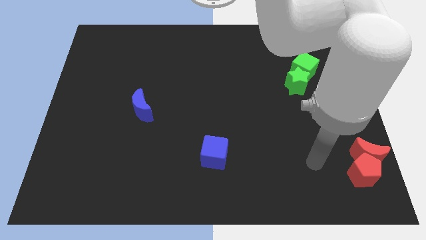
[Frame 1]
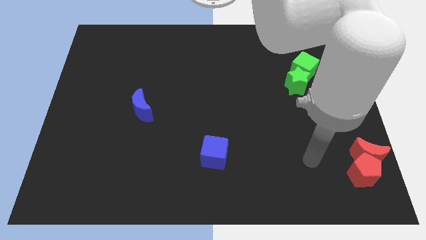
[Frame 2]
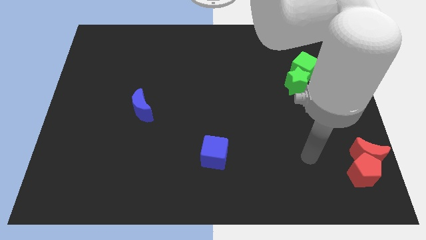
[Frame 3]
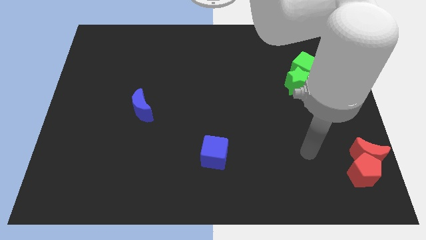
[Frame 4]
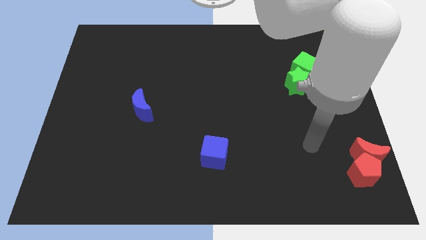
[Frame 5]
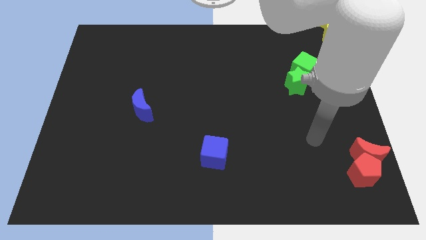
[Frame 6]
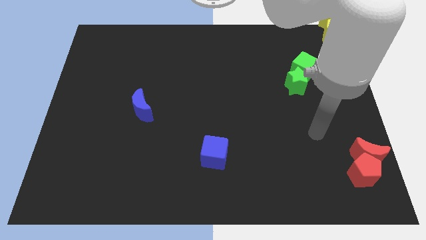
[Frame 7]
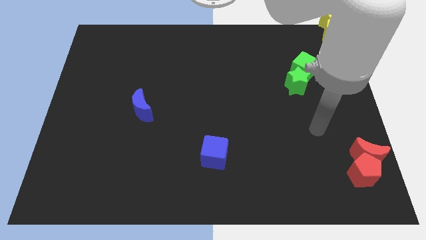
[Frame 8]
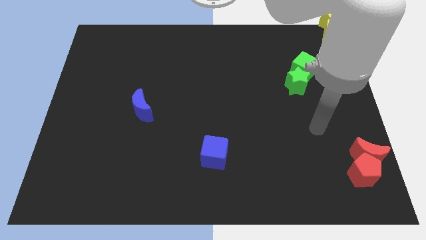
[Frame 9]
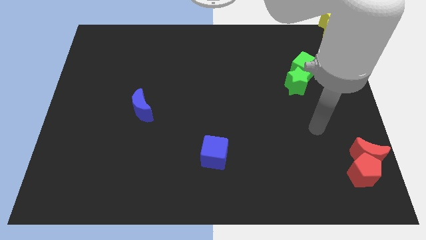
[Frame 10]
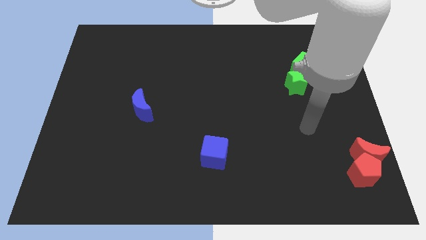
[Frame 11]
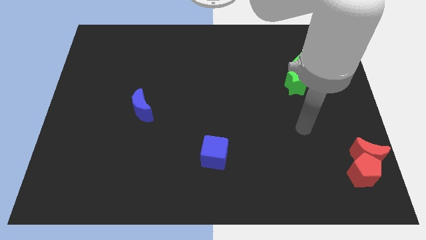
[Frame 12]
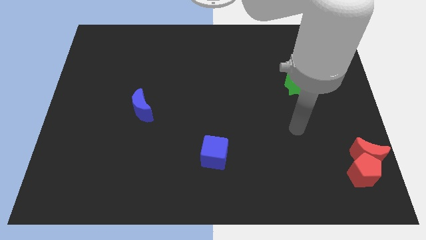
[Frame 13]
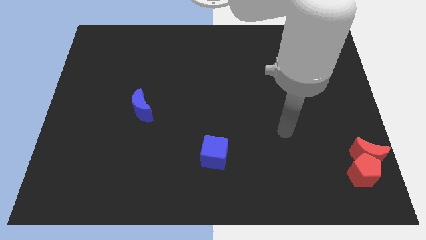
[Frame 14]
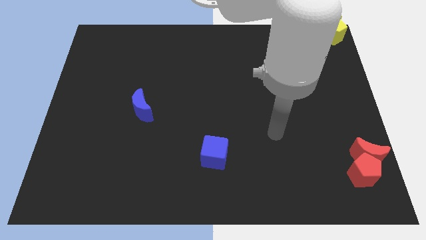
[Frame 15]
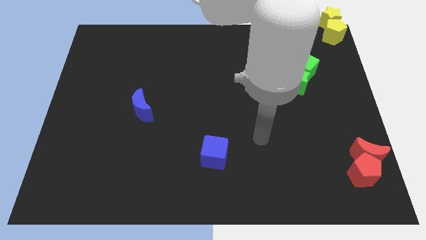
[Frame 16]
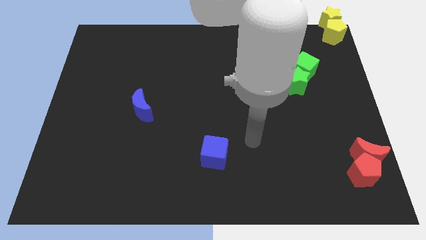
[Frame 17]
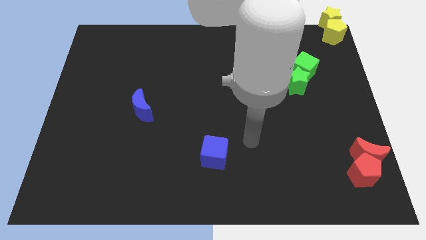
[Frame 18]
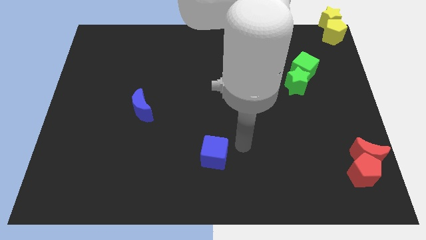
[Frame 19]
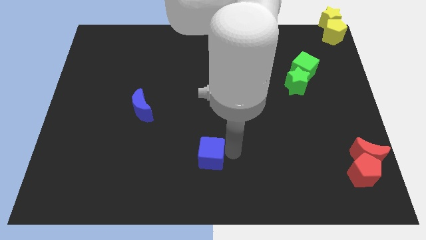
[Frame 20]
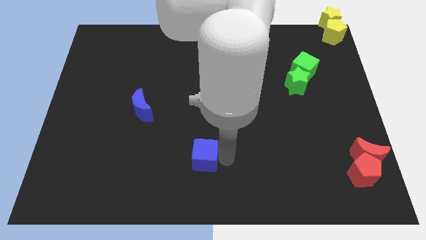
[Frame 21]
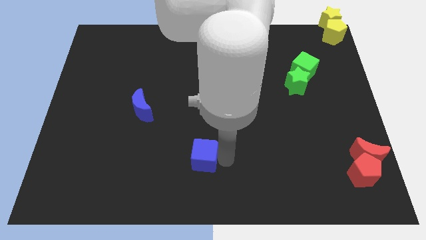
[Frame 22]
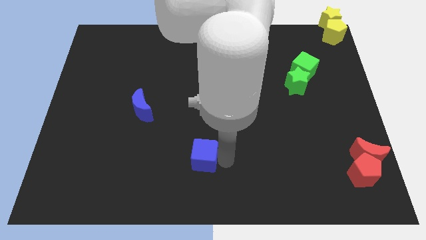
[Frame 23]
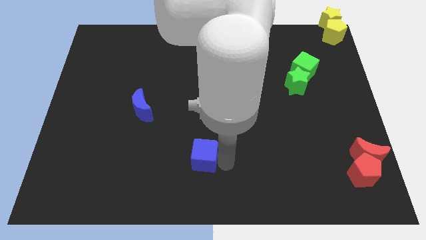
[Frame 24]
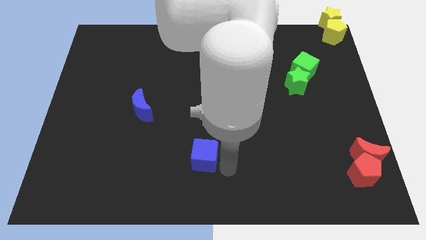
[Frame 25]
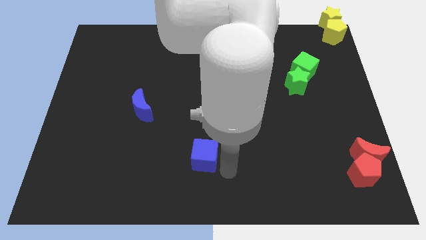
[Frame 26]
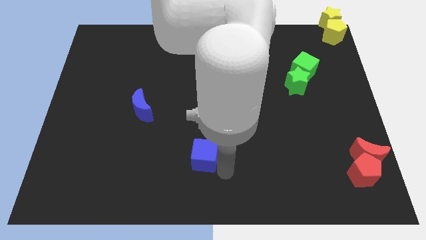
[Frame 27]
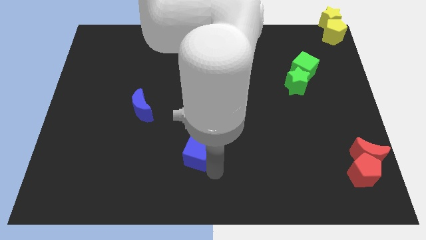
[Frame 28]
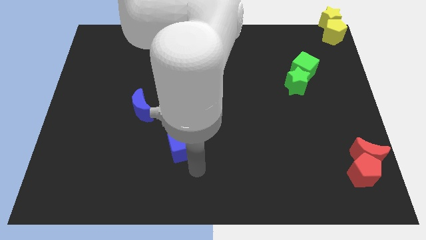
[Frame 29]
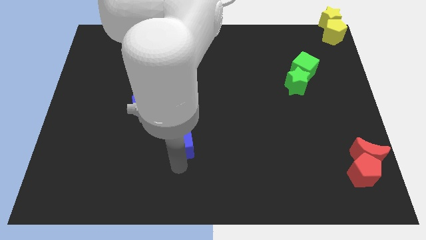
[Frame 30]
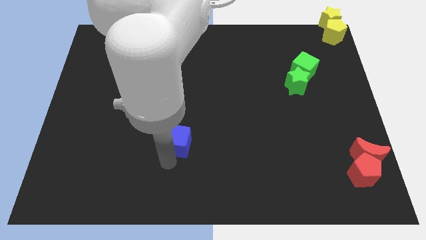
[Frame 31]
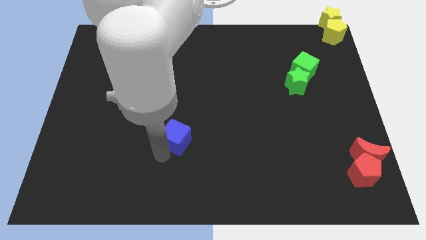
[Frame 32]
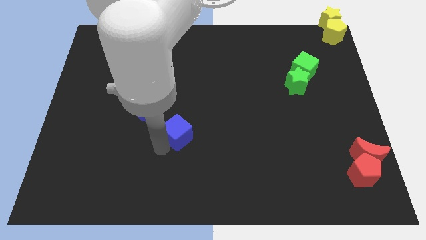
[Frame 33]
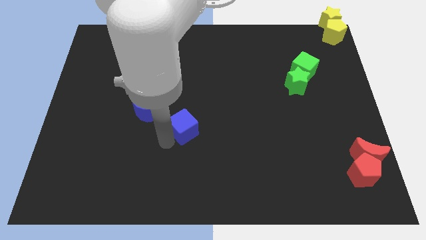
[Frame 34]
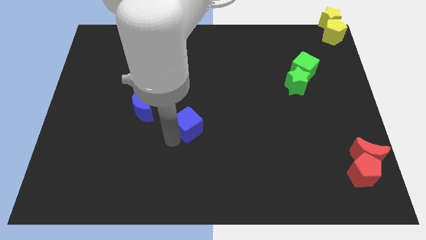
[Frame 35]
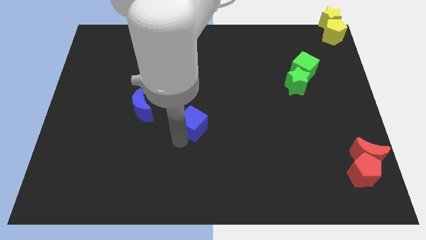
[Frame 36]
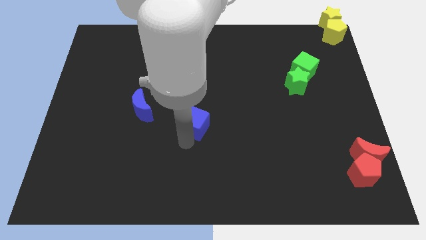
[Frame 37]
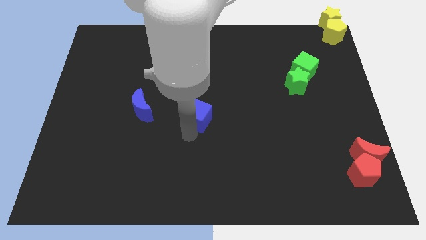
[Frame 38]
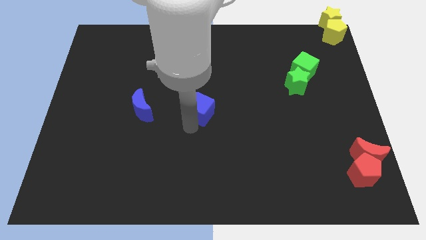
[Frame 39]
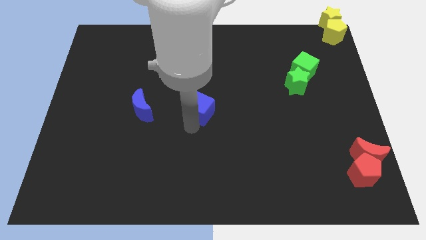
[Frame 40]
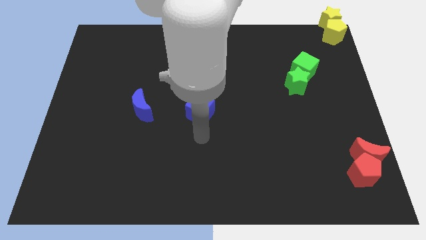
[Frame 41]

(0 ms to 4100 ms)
push the blue cube horizontally at the right side of the blue crescent

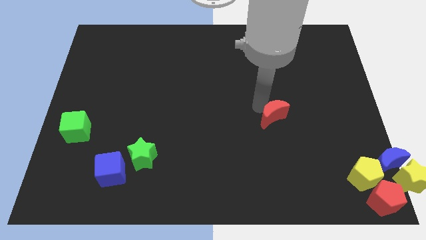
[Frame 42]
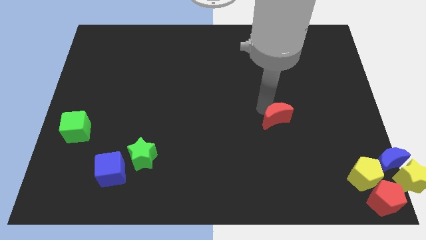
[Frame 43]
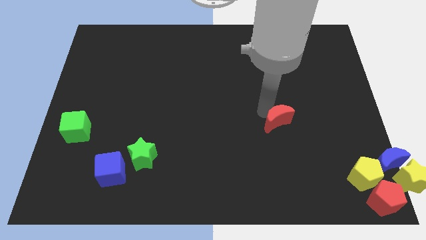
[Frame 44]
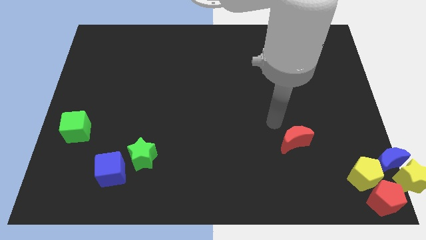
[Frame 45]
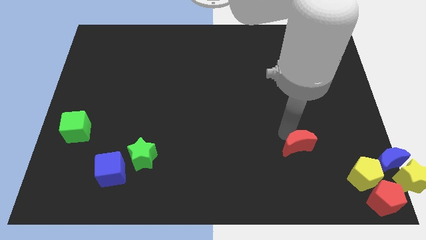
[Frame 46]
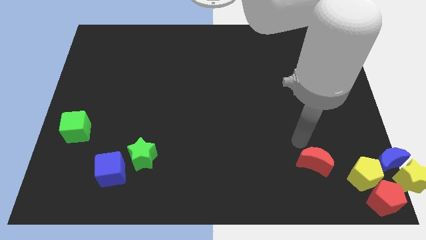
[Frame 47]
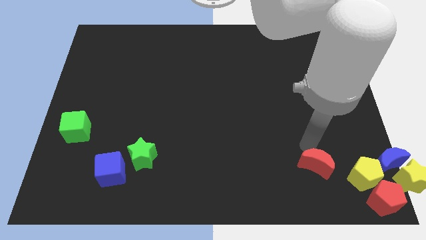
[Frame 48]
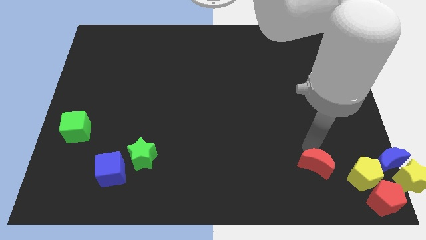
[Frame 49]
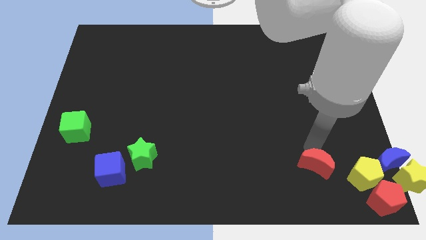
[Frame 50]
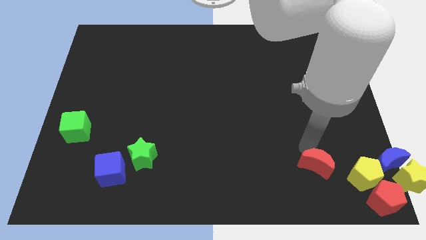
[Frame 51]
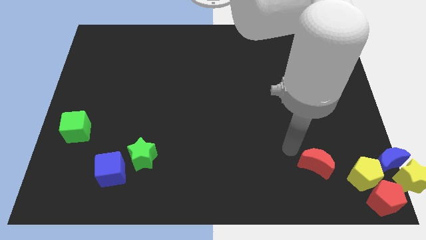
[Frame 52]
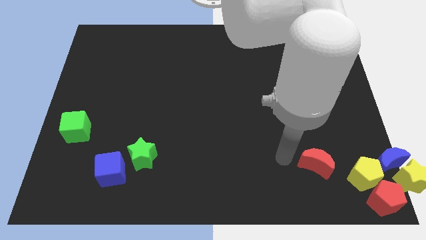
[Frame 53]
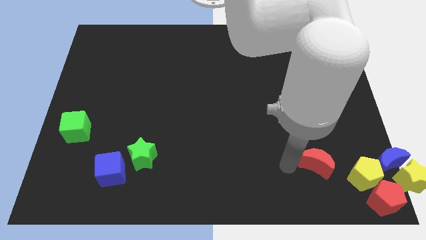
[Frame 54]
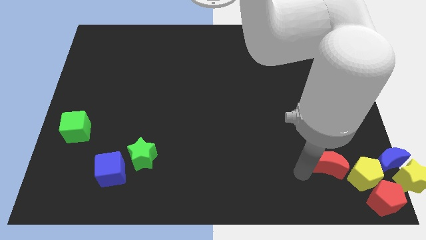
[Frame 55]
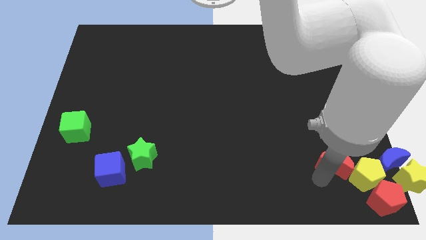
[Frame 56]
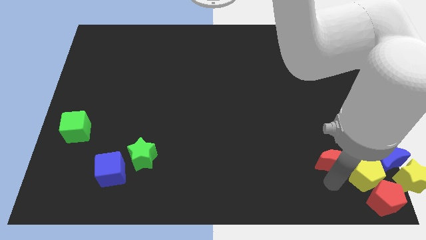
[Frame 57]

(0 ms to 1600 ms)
push the red crescent into the yellow pentagon

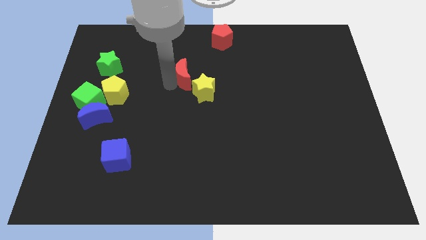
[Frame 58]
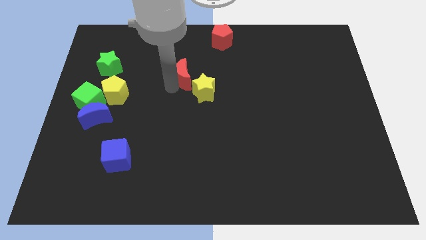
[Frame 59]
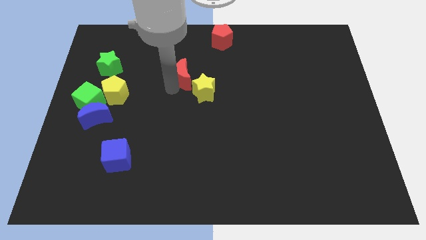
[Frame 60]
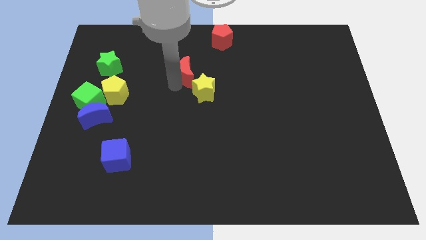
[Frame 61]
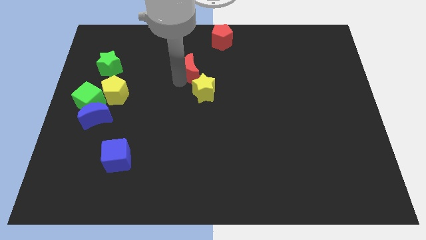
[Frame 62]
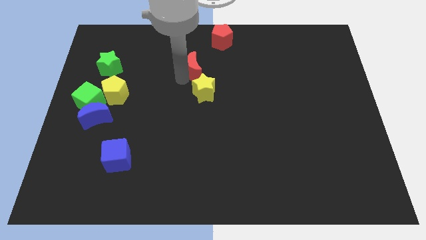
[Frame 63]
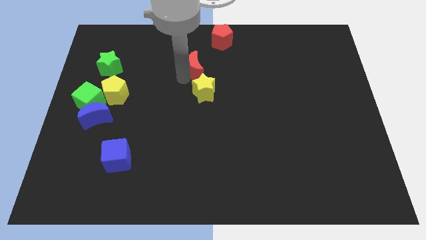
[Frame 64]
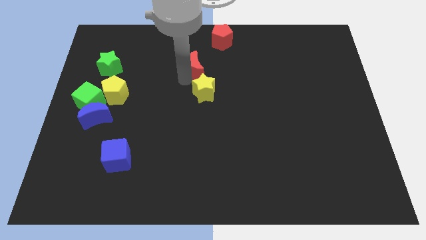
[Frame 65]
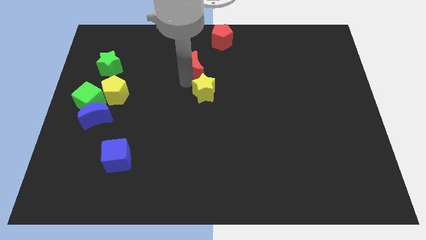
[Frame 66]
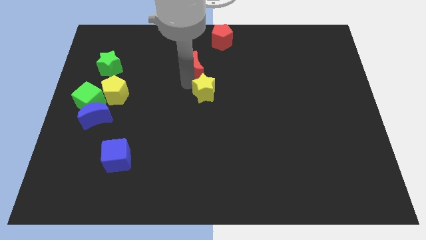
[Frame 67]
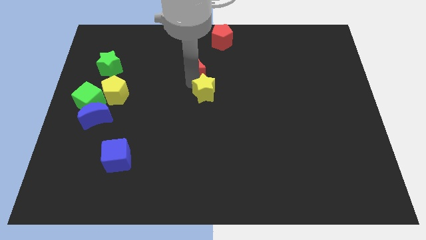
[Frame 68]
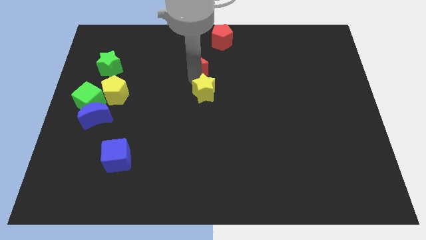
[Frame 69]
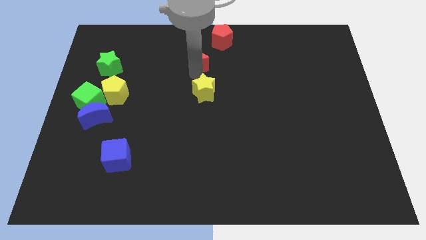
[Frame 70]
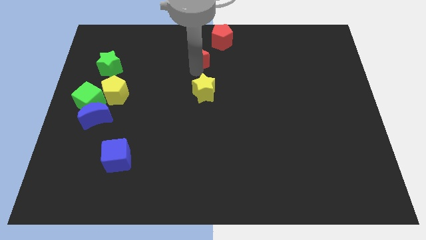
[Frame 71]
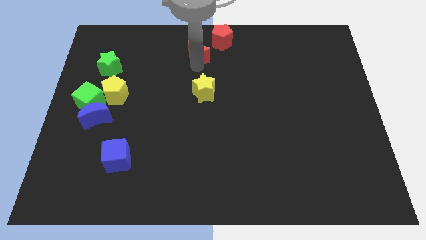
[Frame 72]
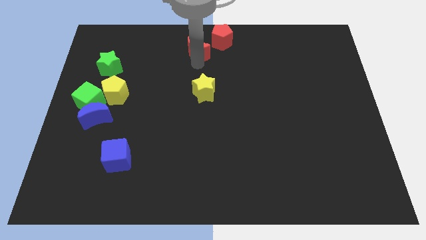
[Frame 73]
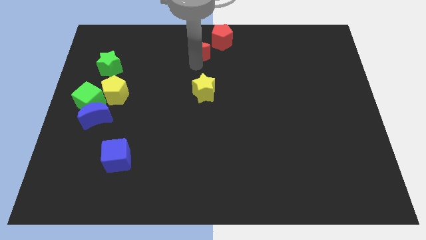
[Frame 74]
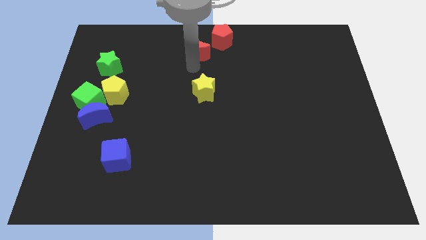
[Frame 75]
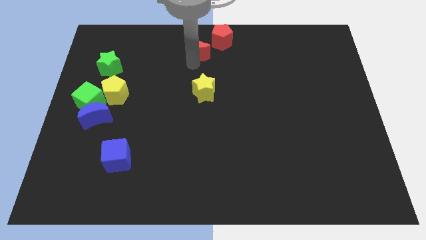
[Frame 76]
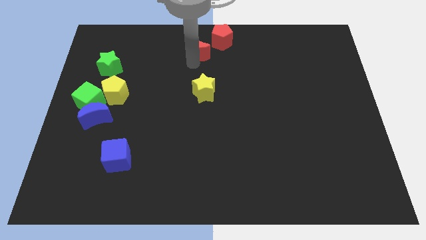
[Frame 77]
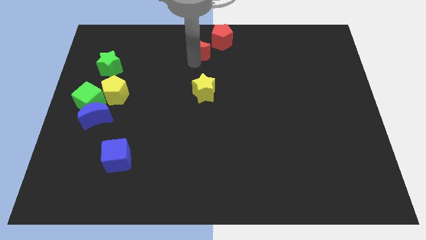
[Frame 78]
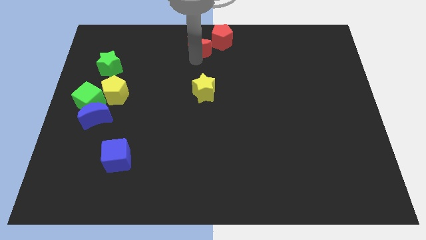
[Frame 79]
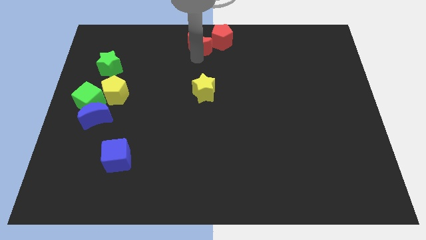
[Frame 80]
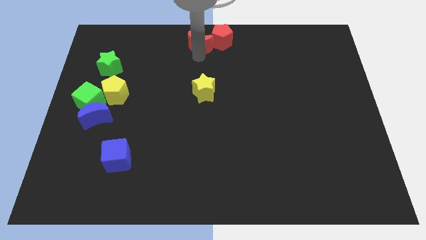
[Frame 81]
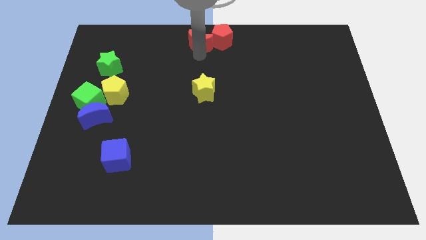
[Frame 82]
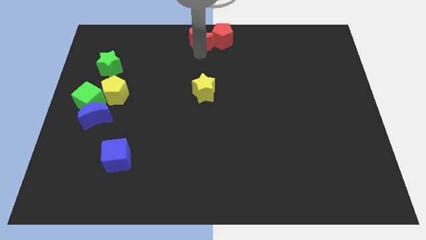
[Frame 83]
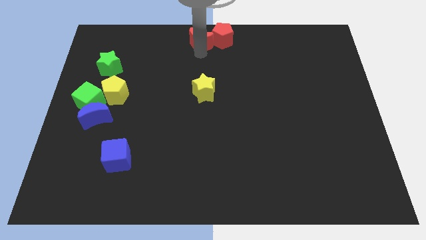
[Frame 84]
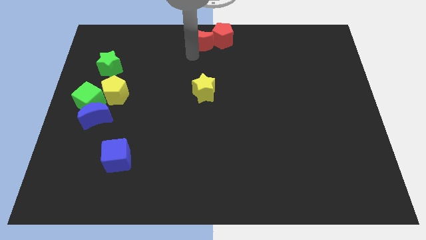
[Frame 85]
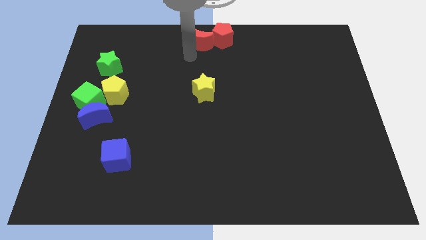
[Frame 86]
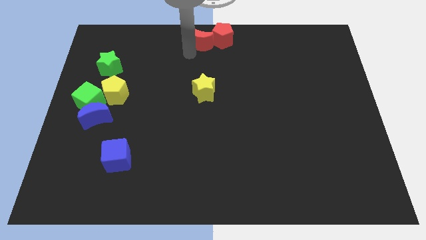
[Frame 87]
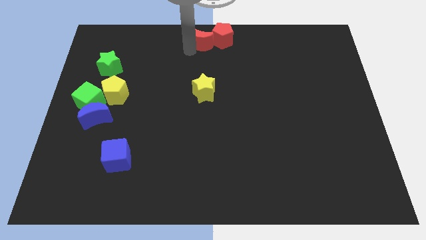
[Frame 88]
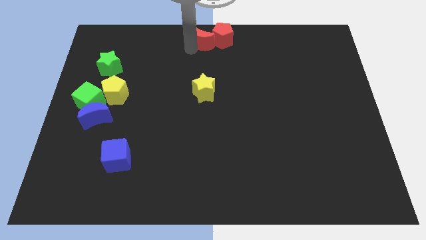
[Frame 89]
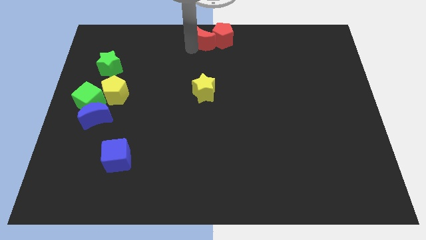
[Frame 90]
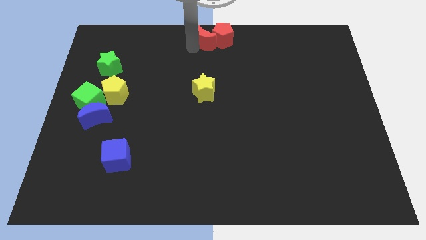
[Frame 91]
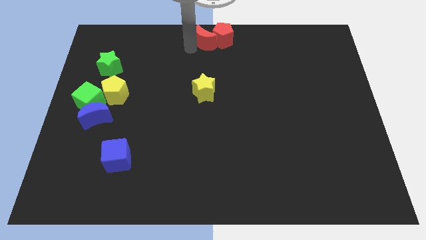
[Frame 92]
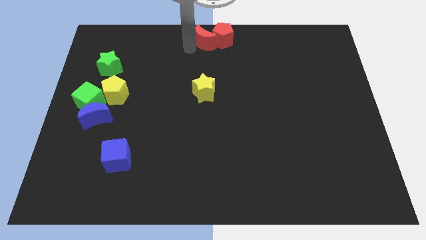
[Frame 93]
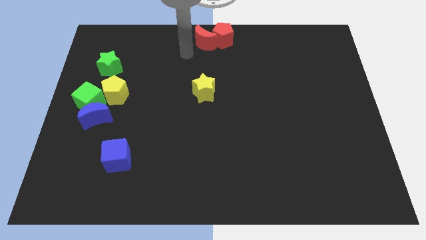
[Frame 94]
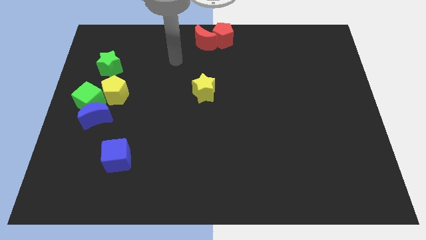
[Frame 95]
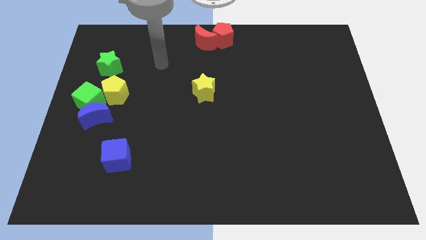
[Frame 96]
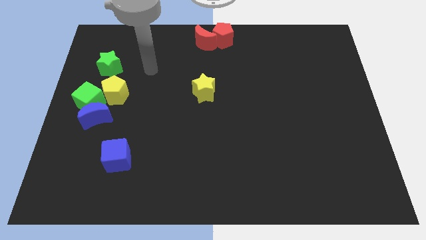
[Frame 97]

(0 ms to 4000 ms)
slide the red moon to the left of red pentagon
